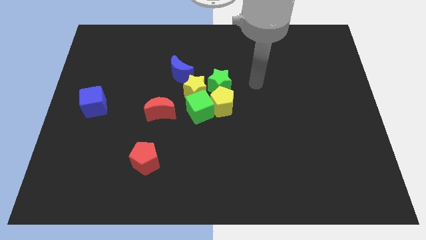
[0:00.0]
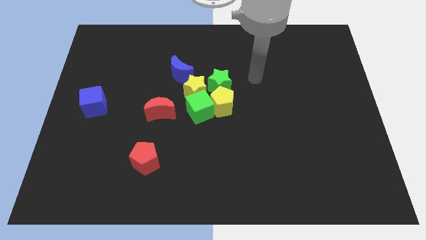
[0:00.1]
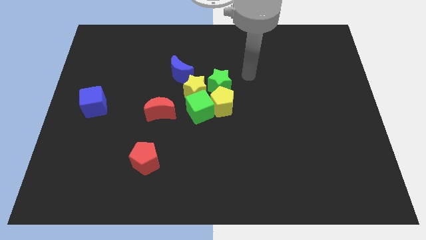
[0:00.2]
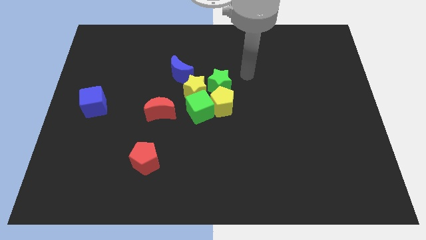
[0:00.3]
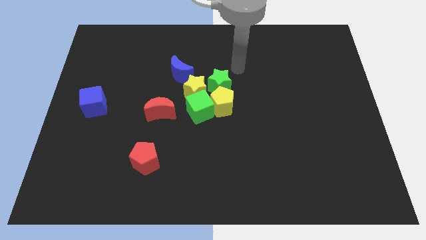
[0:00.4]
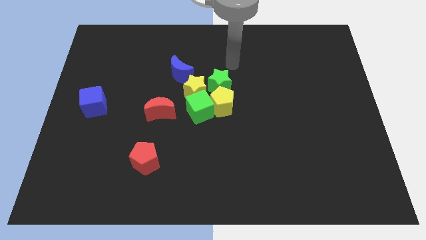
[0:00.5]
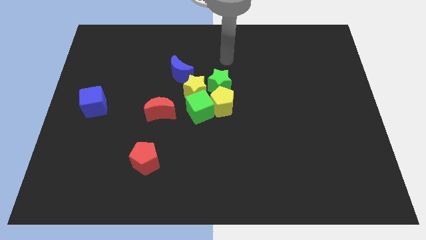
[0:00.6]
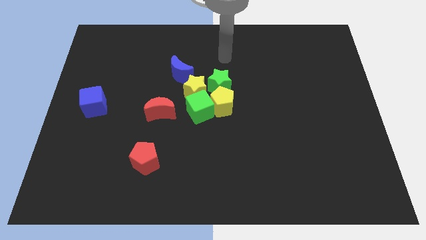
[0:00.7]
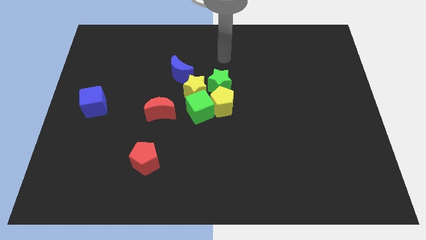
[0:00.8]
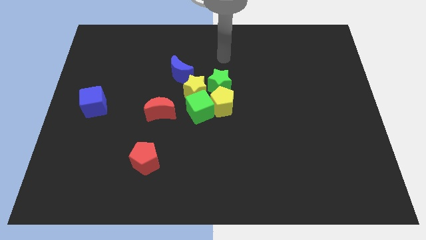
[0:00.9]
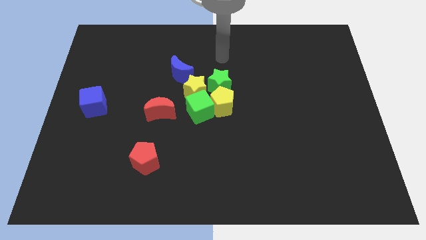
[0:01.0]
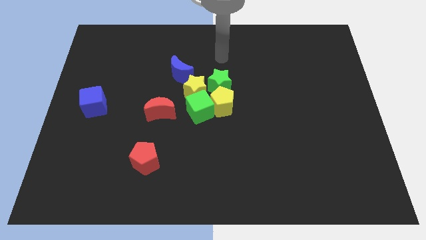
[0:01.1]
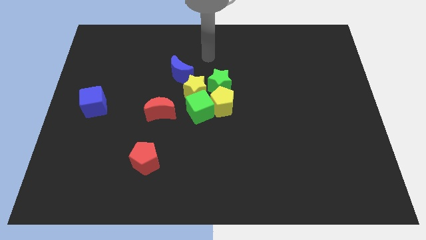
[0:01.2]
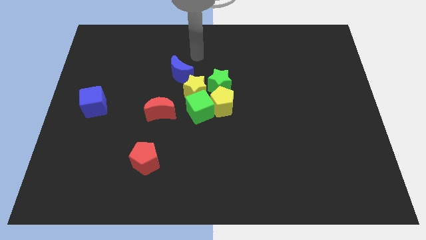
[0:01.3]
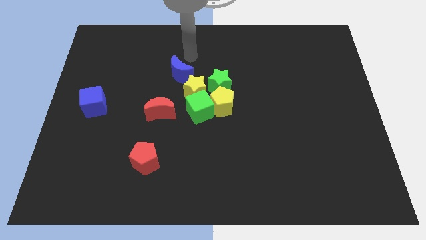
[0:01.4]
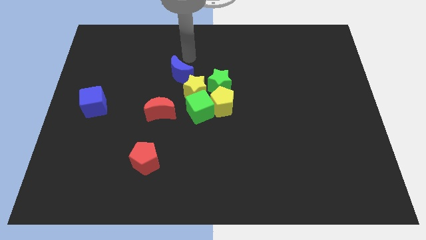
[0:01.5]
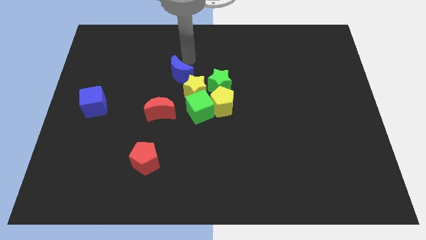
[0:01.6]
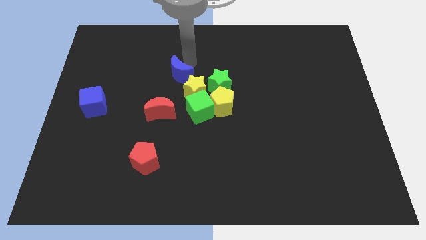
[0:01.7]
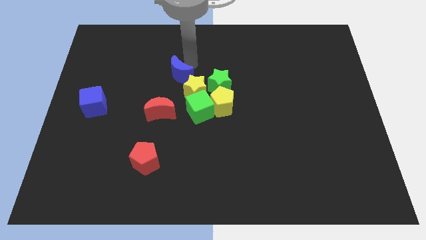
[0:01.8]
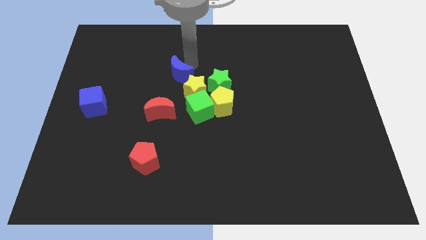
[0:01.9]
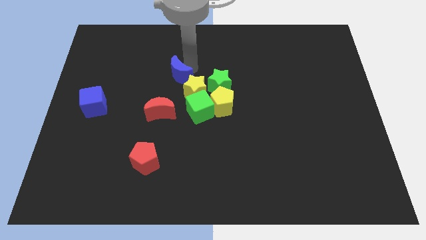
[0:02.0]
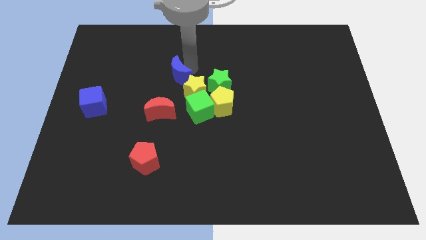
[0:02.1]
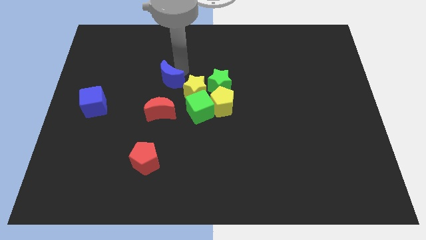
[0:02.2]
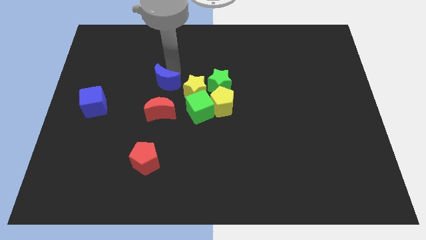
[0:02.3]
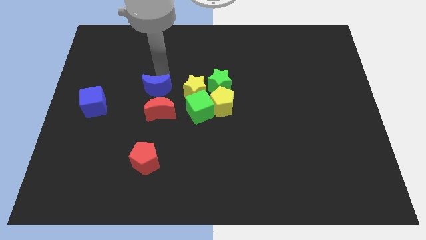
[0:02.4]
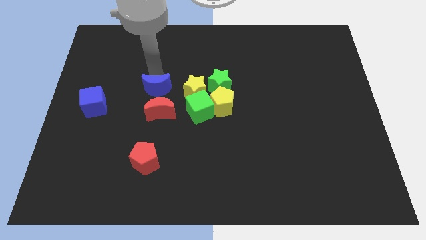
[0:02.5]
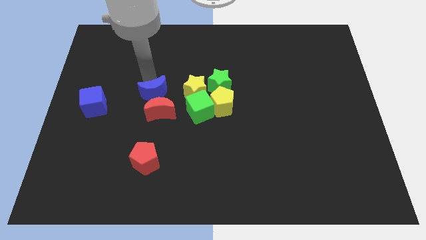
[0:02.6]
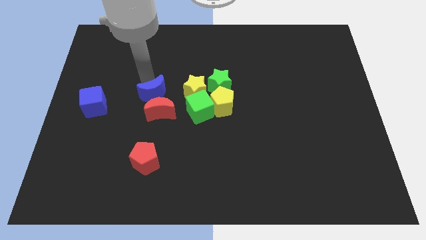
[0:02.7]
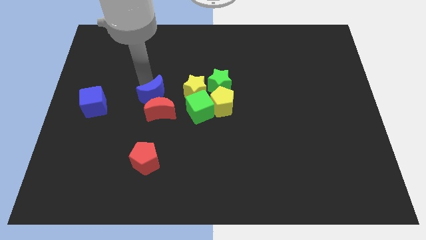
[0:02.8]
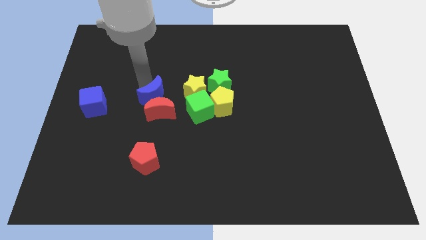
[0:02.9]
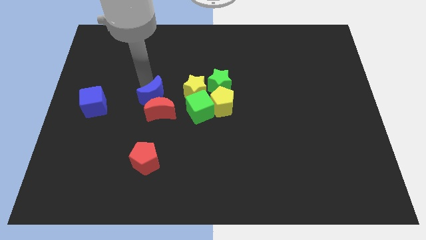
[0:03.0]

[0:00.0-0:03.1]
move blue moon towards the red moon

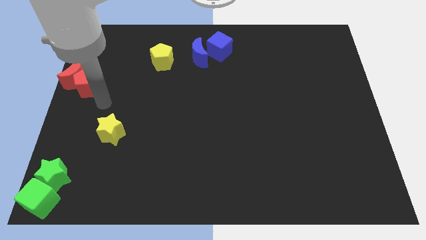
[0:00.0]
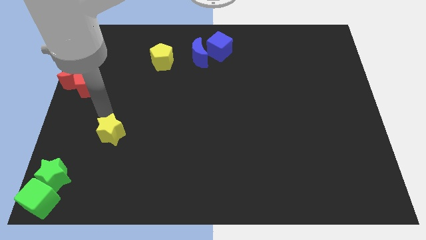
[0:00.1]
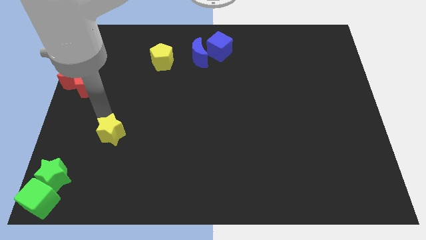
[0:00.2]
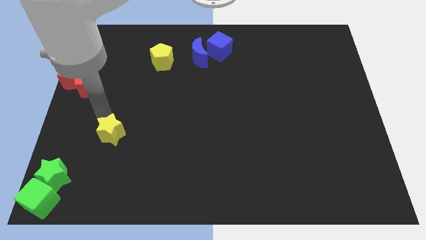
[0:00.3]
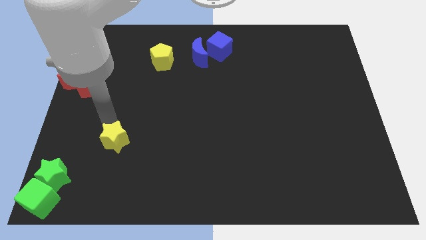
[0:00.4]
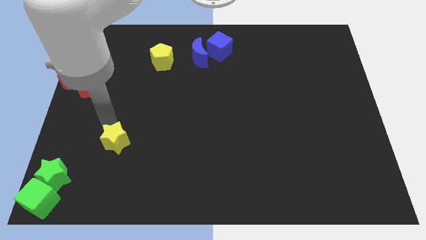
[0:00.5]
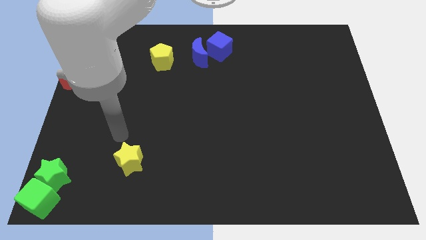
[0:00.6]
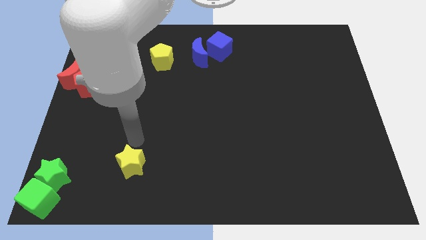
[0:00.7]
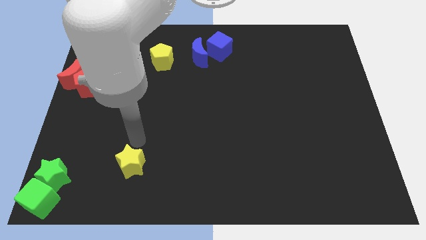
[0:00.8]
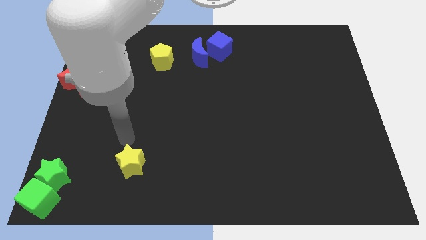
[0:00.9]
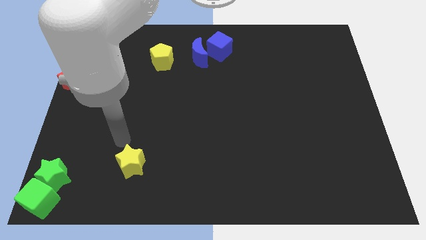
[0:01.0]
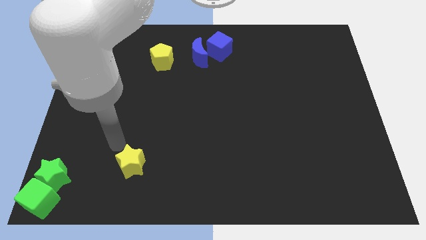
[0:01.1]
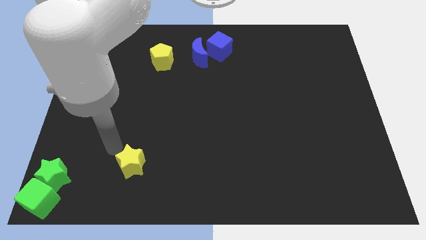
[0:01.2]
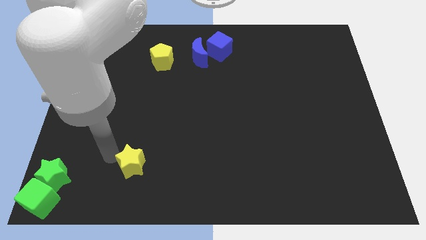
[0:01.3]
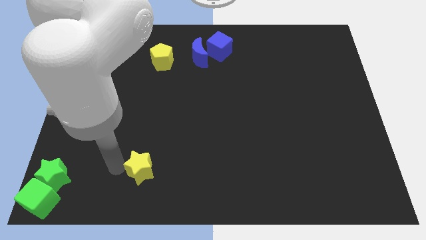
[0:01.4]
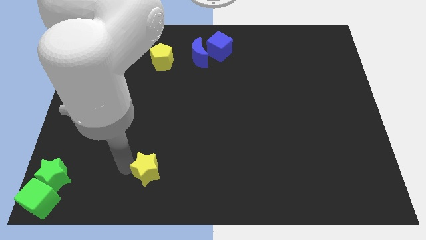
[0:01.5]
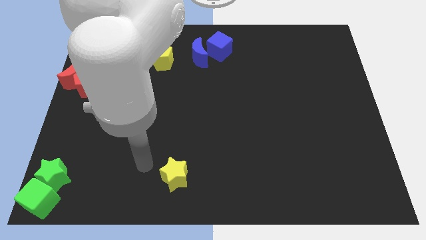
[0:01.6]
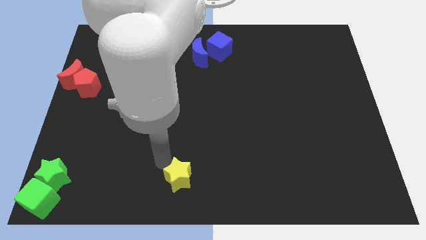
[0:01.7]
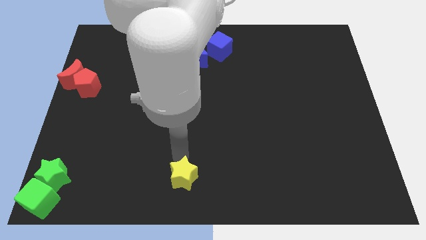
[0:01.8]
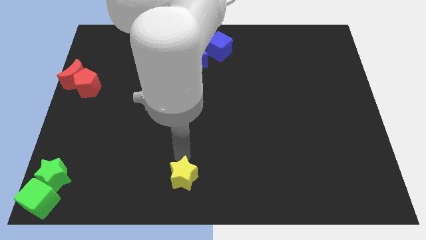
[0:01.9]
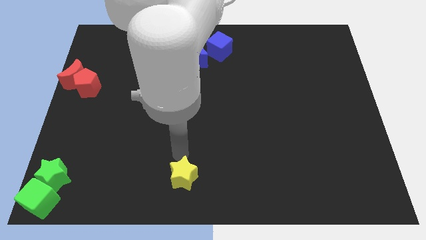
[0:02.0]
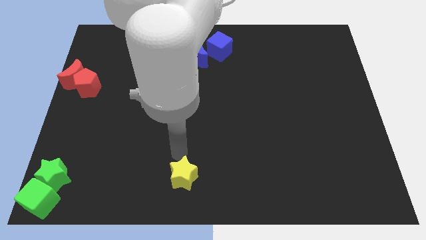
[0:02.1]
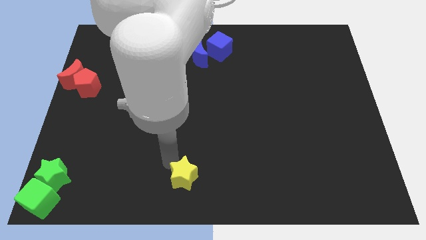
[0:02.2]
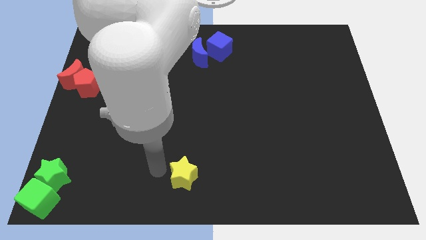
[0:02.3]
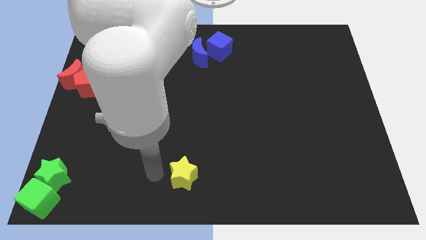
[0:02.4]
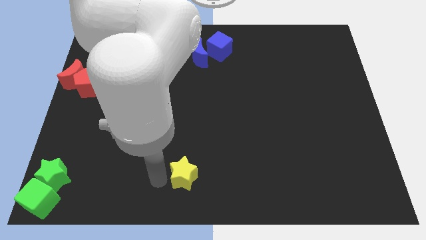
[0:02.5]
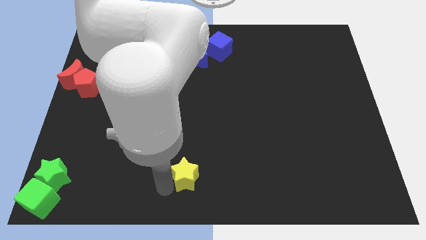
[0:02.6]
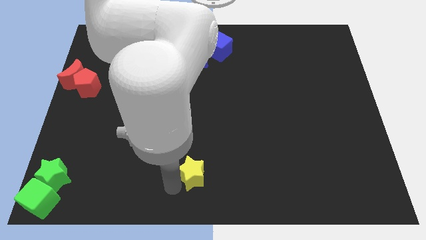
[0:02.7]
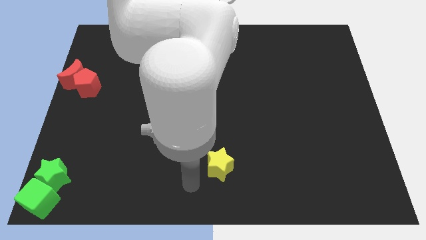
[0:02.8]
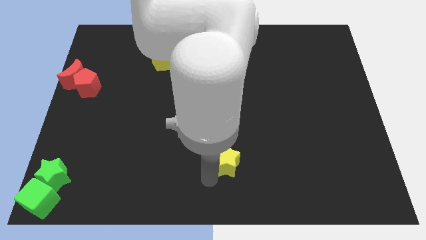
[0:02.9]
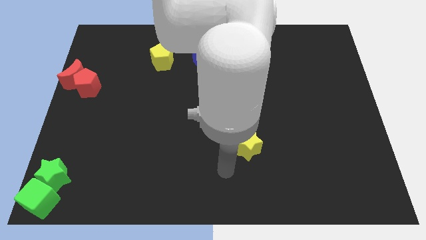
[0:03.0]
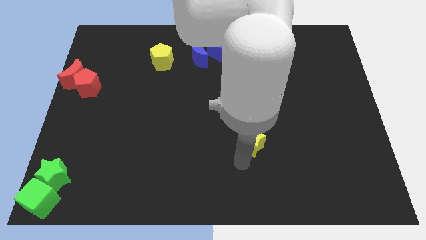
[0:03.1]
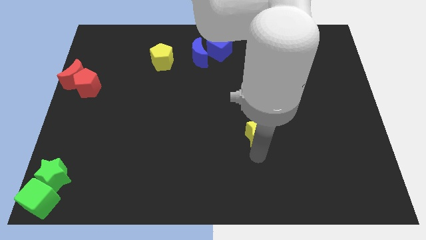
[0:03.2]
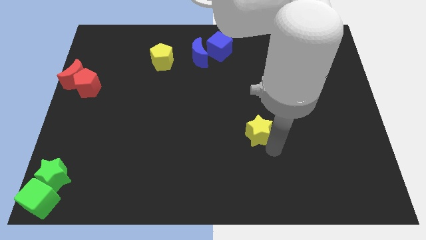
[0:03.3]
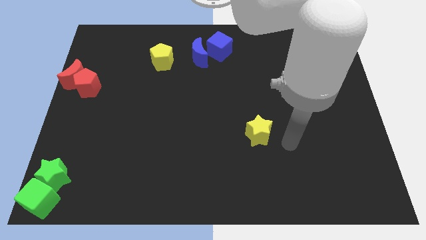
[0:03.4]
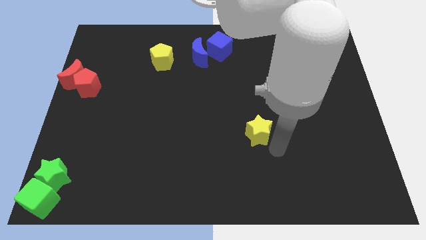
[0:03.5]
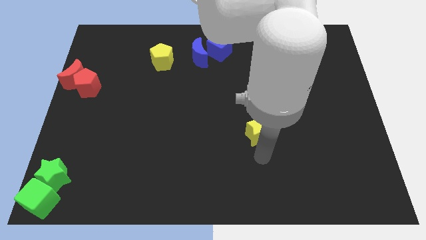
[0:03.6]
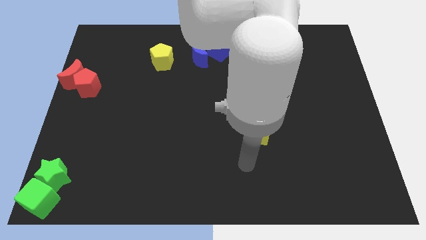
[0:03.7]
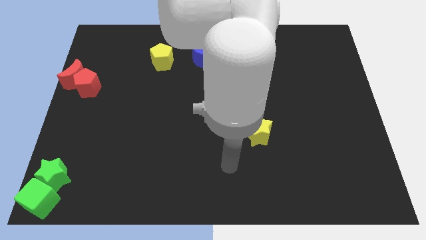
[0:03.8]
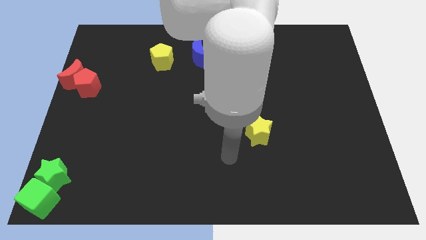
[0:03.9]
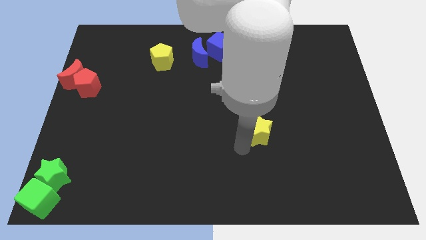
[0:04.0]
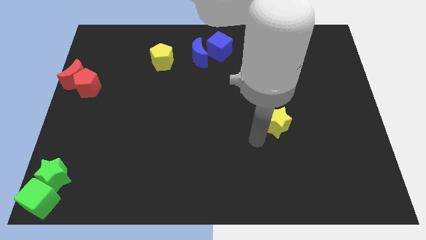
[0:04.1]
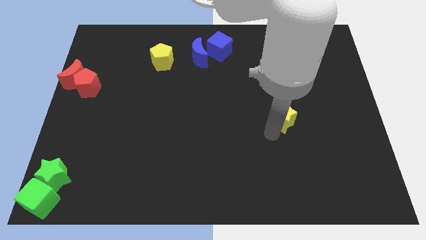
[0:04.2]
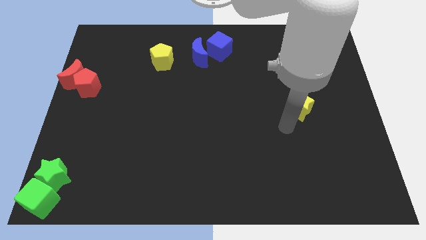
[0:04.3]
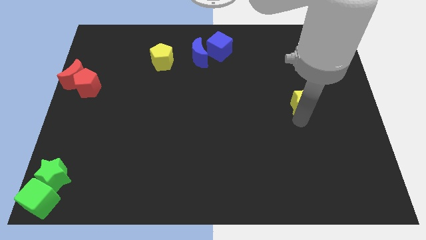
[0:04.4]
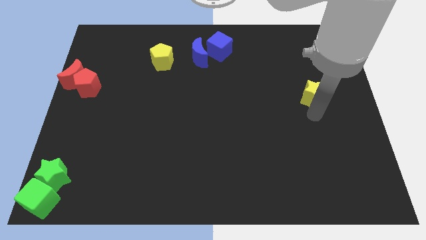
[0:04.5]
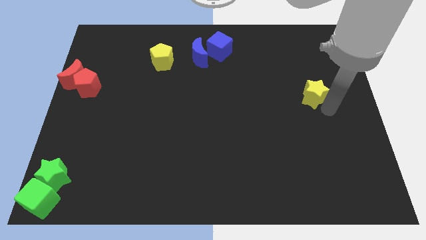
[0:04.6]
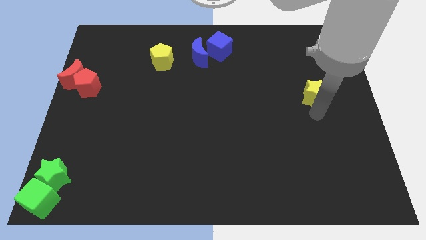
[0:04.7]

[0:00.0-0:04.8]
move the yellow star towards the center right of the board

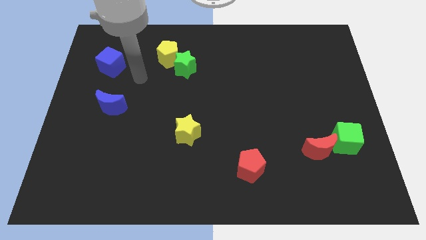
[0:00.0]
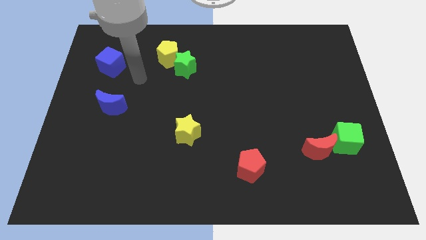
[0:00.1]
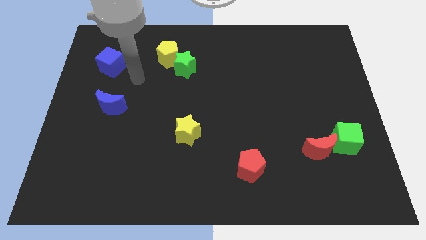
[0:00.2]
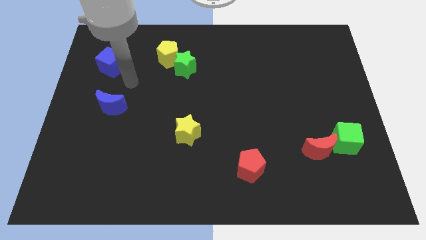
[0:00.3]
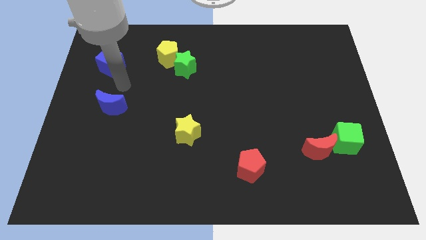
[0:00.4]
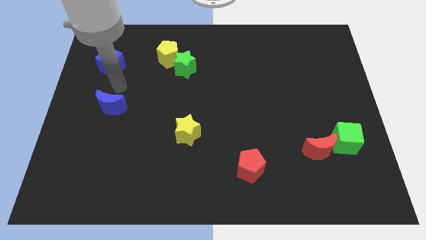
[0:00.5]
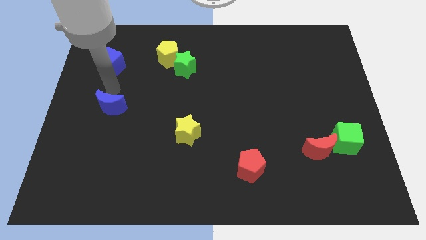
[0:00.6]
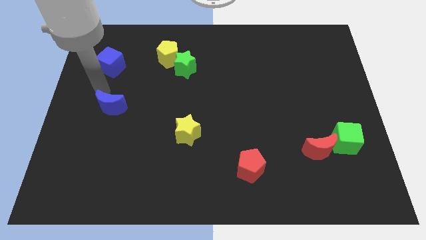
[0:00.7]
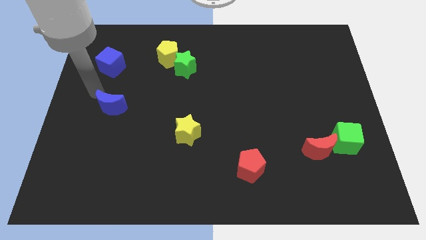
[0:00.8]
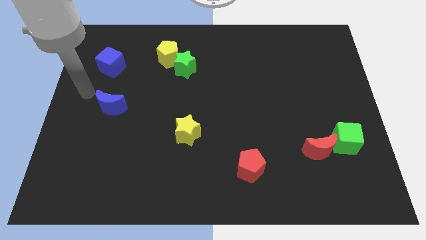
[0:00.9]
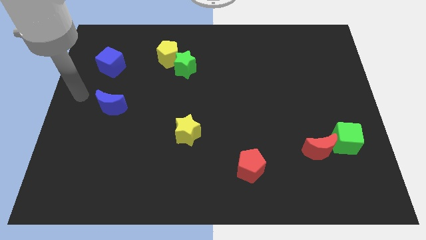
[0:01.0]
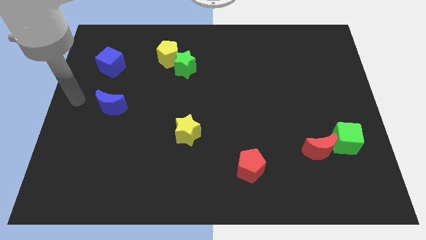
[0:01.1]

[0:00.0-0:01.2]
move your arm to the left center of the board
